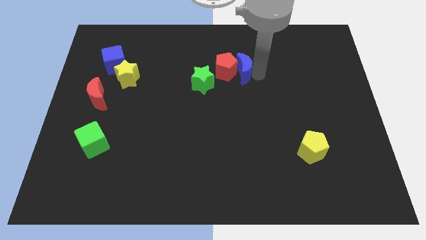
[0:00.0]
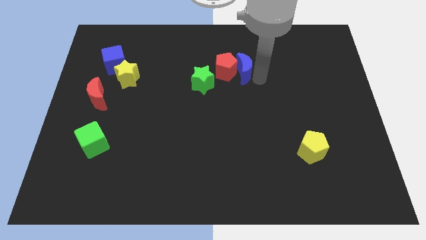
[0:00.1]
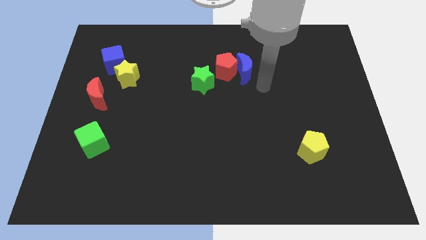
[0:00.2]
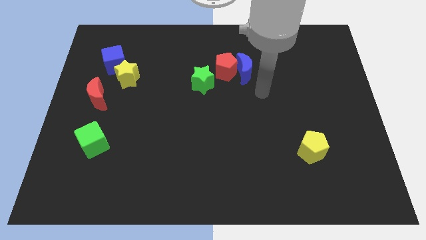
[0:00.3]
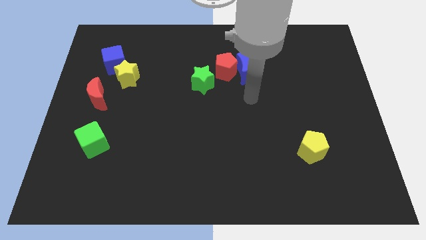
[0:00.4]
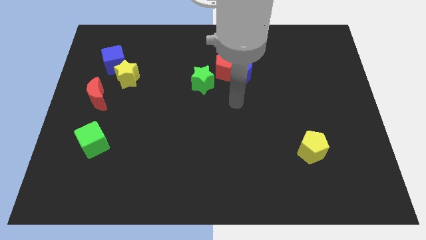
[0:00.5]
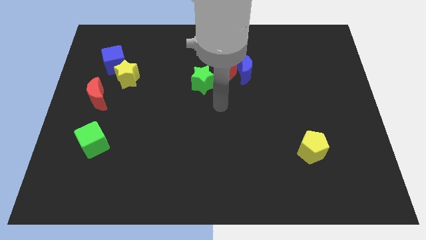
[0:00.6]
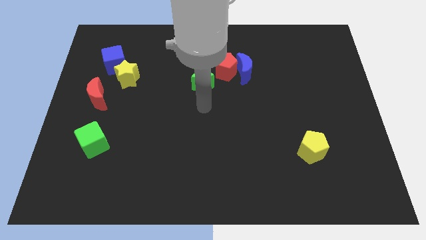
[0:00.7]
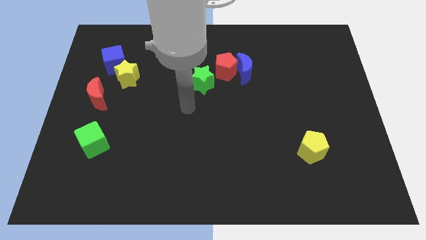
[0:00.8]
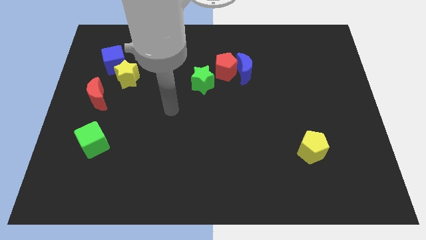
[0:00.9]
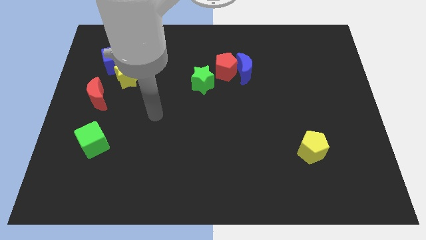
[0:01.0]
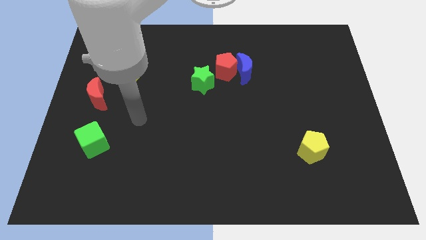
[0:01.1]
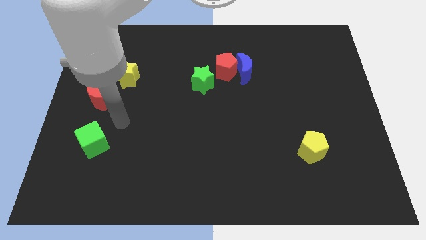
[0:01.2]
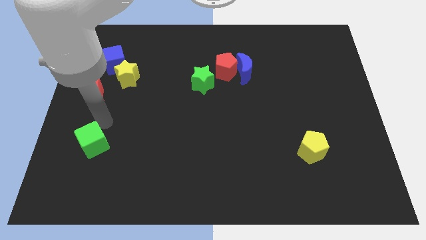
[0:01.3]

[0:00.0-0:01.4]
move your arm close to the green cube

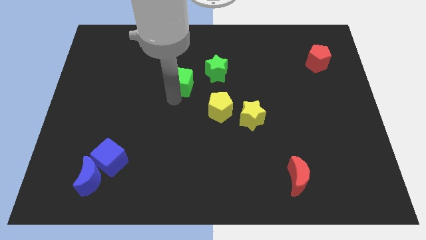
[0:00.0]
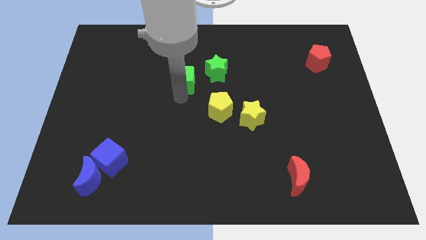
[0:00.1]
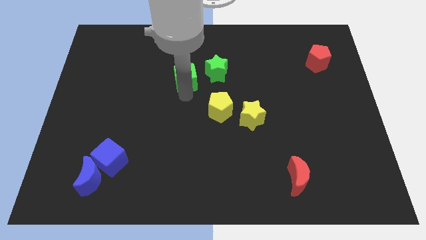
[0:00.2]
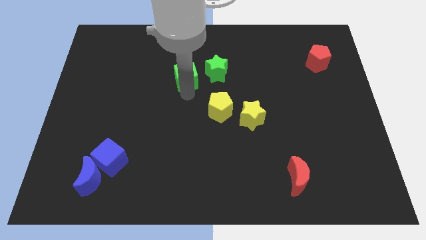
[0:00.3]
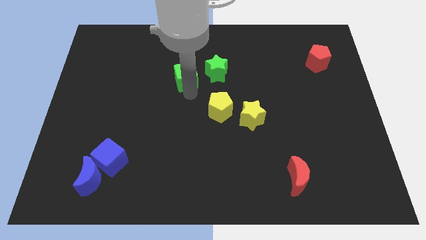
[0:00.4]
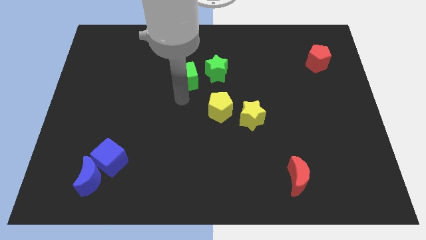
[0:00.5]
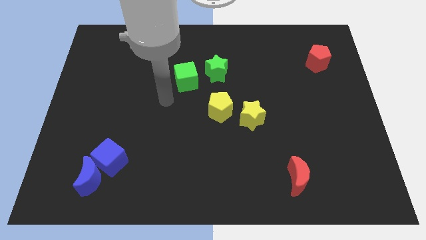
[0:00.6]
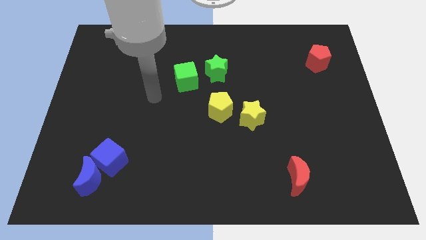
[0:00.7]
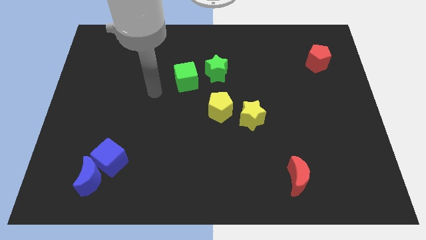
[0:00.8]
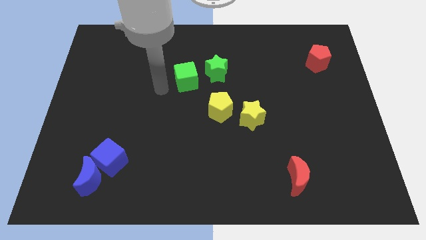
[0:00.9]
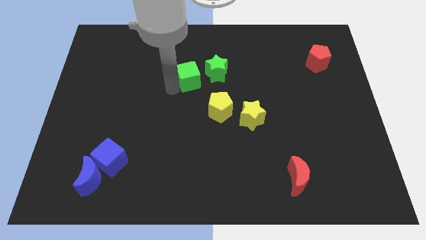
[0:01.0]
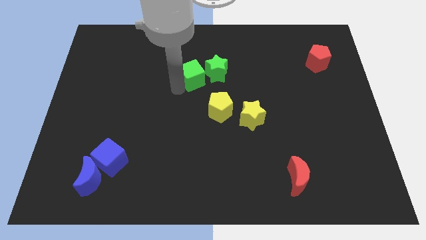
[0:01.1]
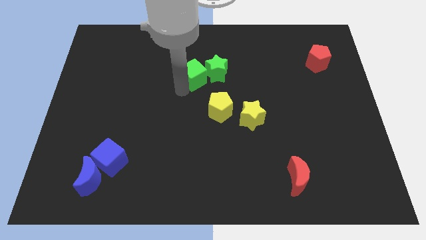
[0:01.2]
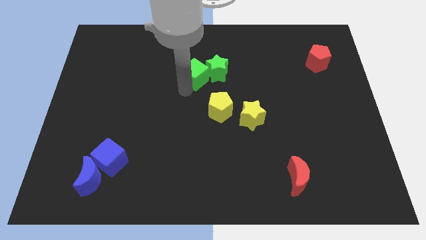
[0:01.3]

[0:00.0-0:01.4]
place the green cube to the left side of green star

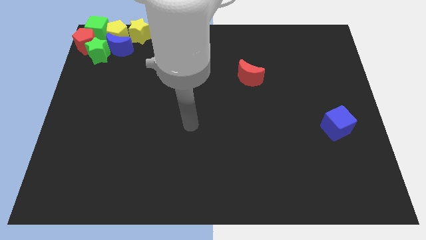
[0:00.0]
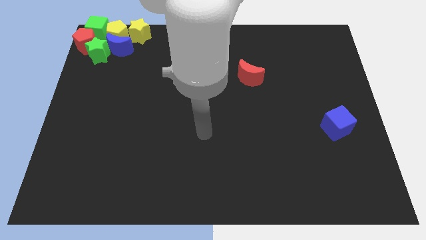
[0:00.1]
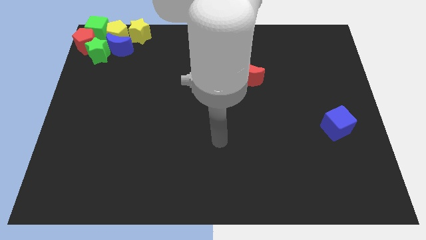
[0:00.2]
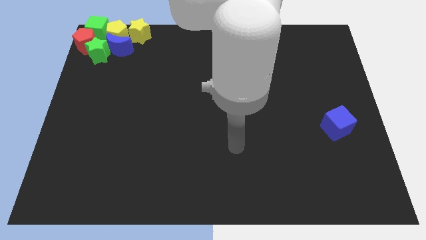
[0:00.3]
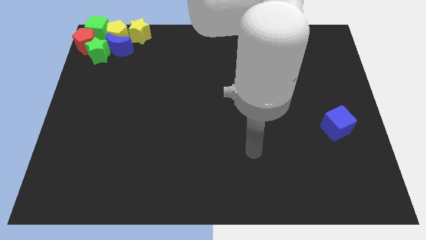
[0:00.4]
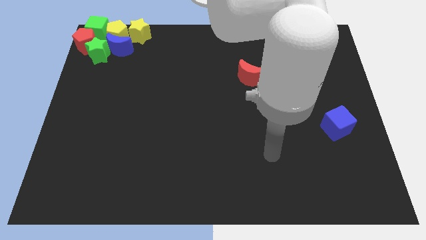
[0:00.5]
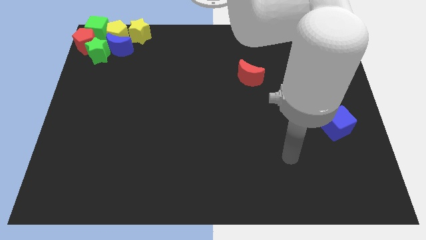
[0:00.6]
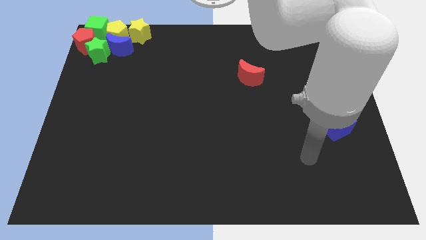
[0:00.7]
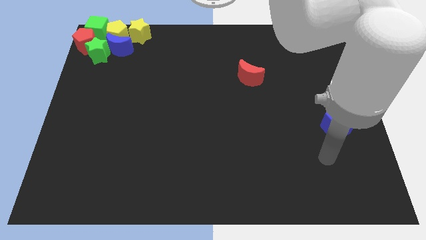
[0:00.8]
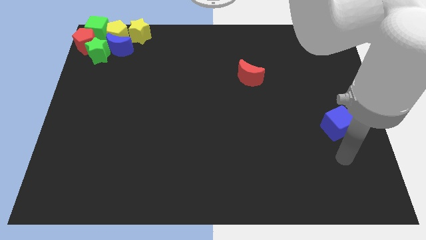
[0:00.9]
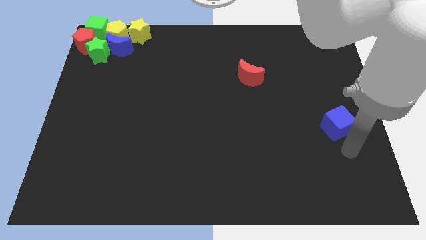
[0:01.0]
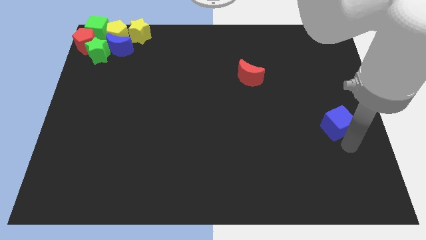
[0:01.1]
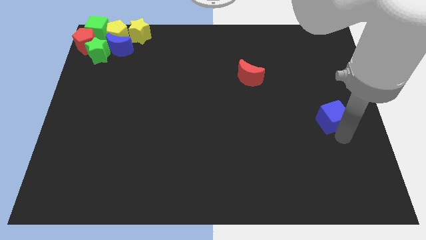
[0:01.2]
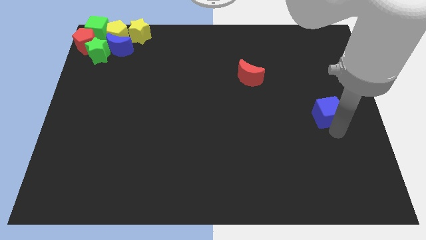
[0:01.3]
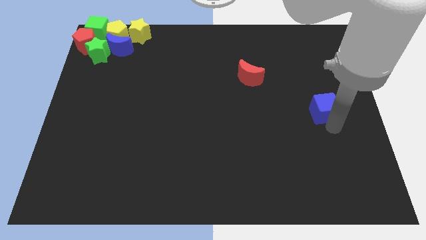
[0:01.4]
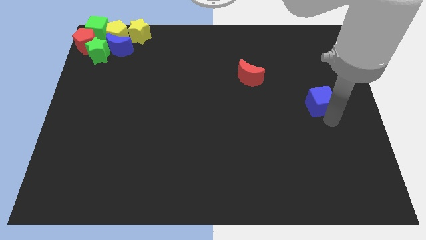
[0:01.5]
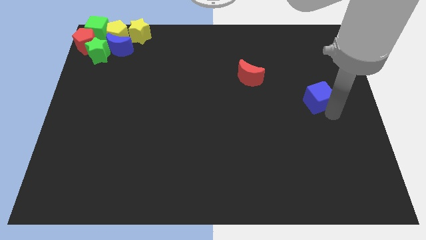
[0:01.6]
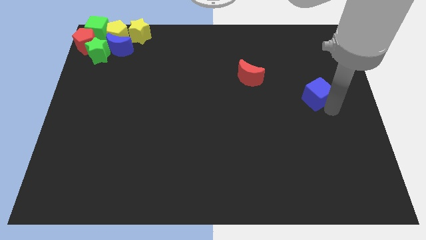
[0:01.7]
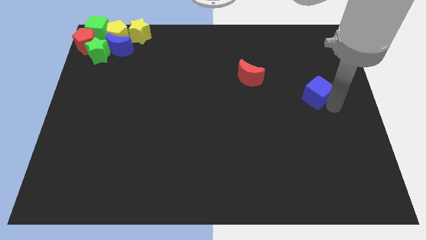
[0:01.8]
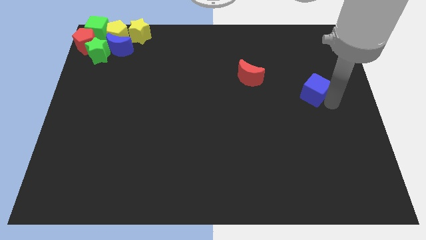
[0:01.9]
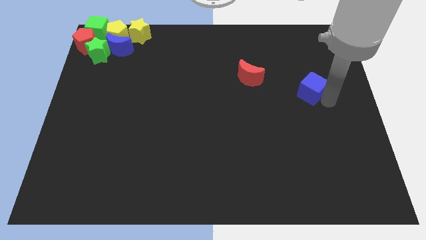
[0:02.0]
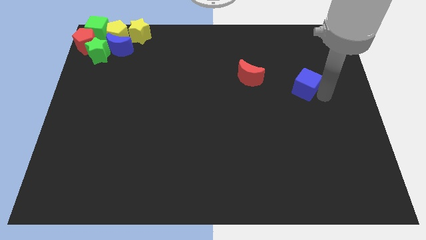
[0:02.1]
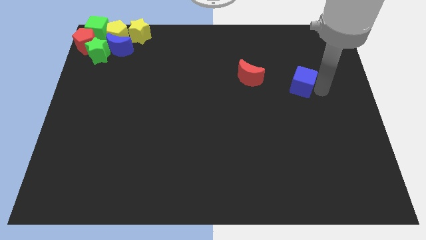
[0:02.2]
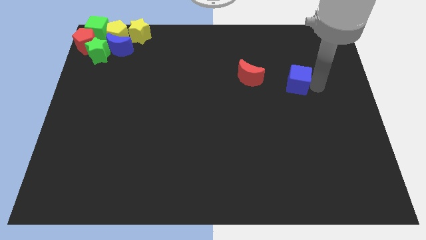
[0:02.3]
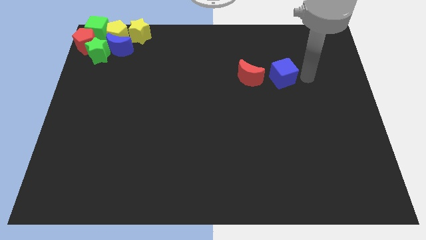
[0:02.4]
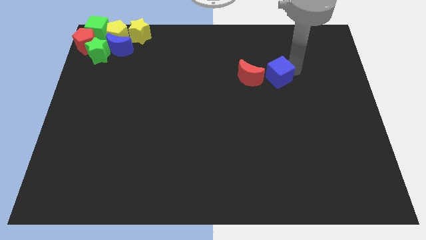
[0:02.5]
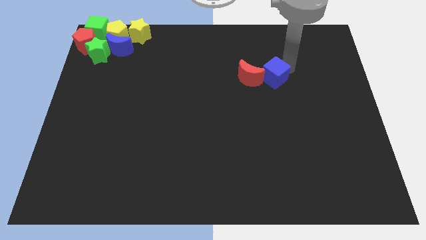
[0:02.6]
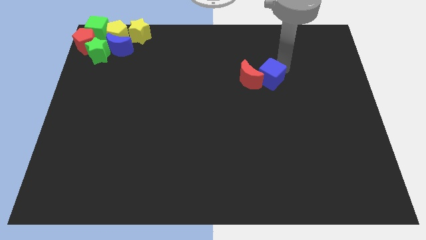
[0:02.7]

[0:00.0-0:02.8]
move blue cube right beside the red moon

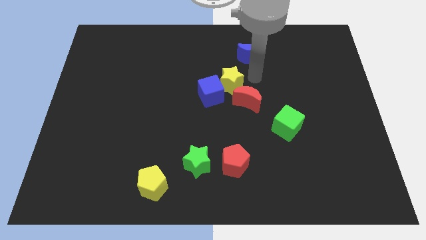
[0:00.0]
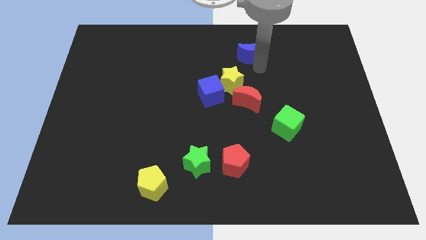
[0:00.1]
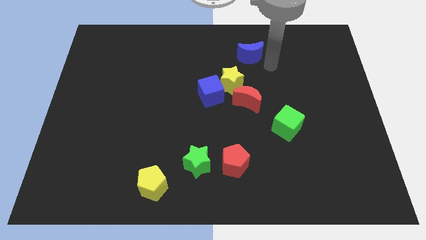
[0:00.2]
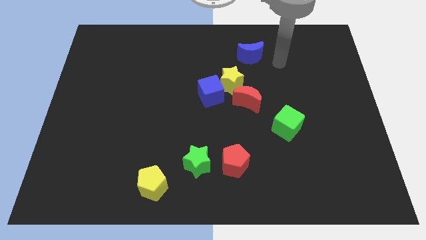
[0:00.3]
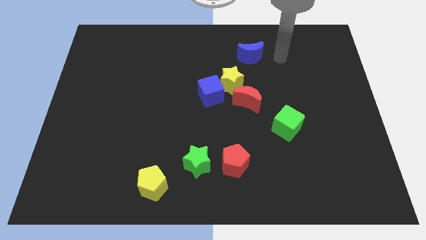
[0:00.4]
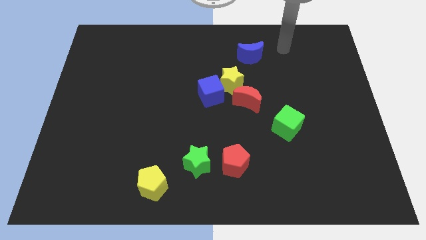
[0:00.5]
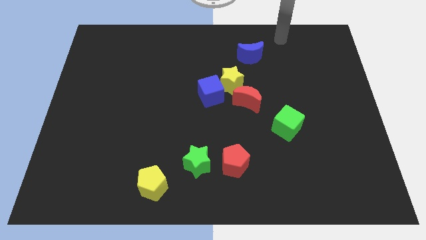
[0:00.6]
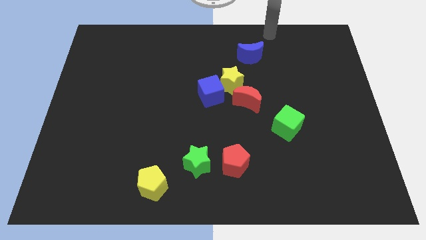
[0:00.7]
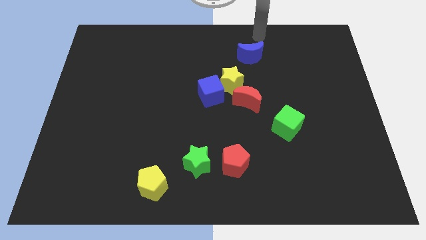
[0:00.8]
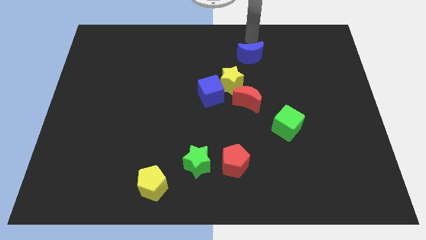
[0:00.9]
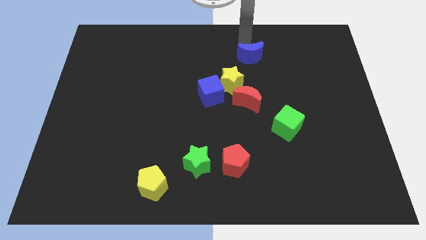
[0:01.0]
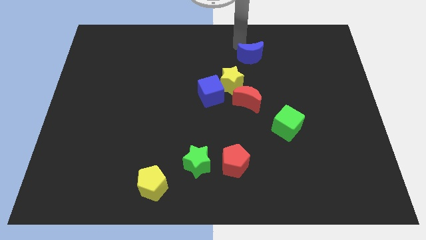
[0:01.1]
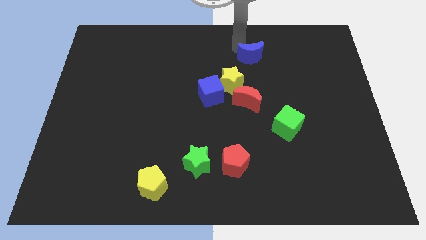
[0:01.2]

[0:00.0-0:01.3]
move your arm to the top of blue crescent

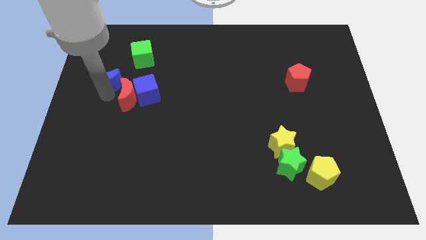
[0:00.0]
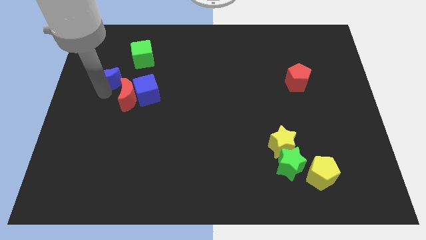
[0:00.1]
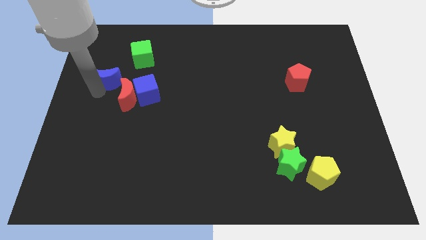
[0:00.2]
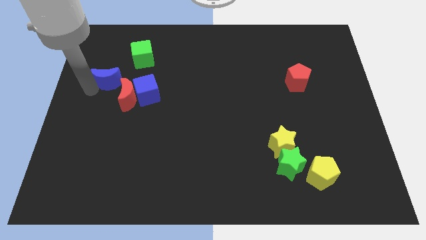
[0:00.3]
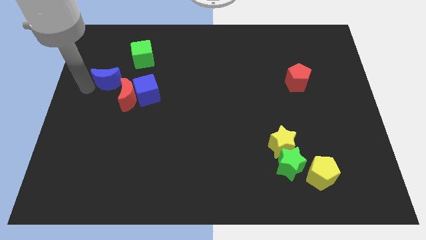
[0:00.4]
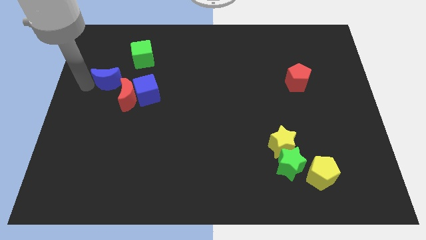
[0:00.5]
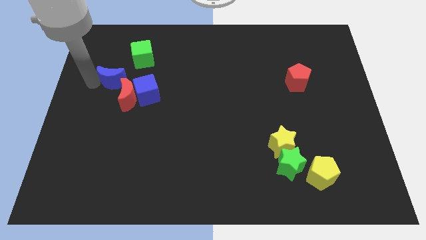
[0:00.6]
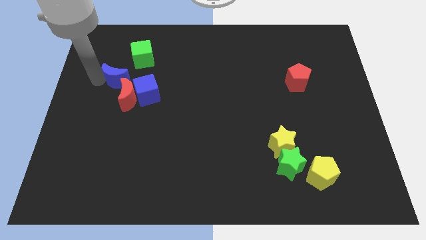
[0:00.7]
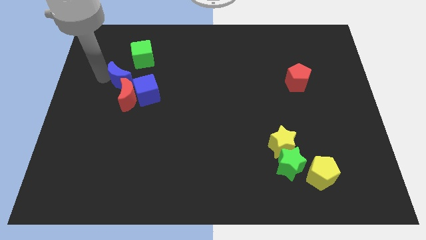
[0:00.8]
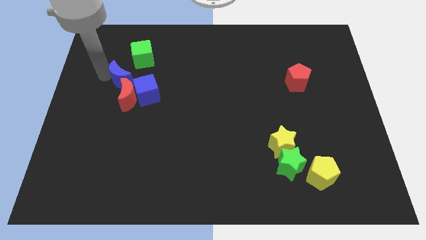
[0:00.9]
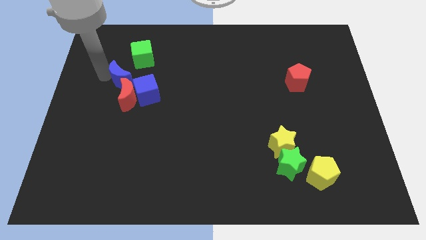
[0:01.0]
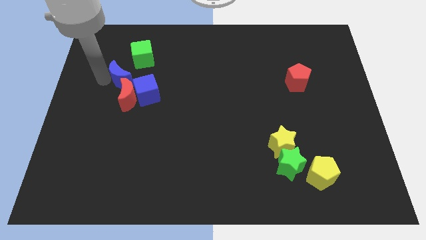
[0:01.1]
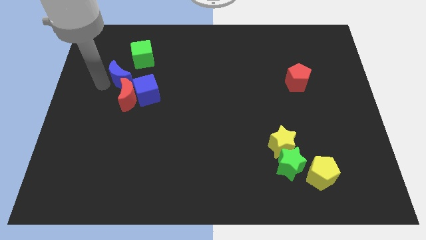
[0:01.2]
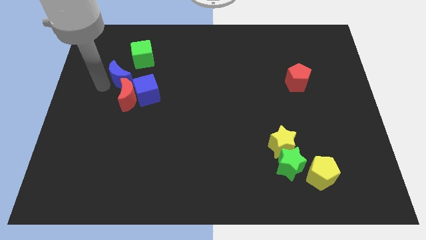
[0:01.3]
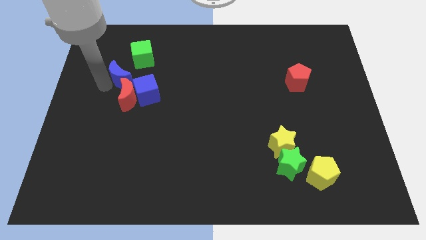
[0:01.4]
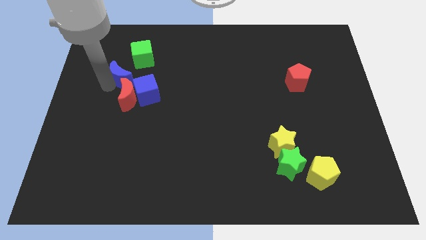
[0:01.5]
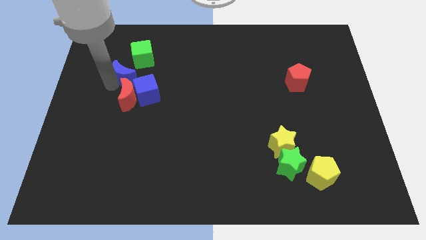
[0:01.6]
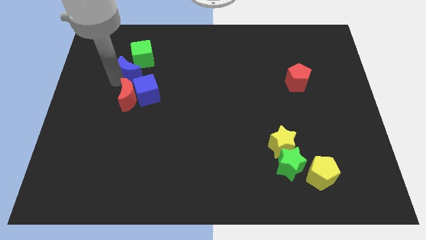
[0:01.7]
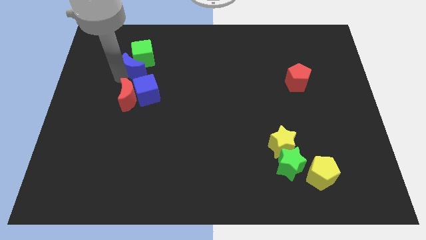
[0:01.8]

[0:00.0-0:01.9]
place blue moon between green cube and blue cube

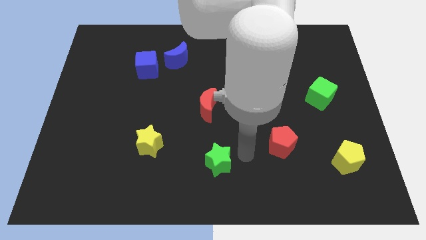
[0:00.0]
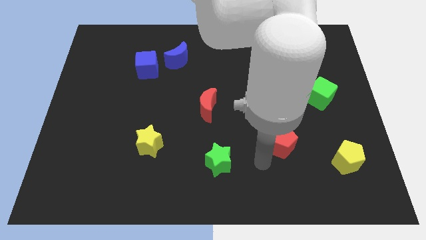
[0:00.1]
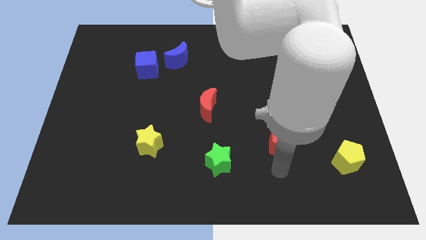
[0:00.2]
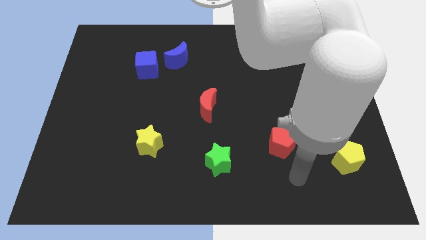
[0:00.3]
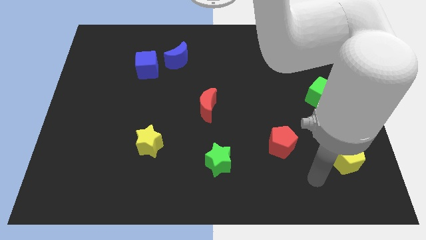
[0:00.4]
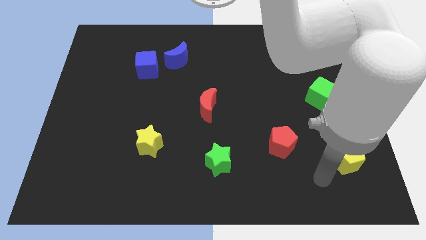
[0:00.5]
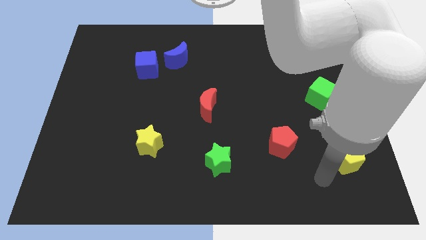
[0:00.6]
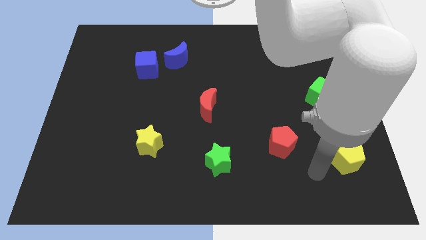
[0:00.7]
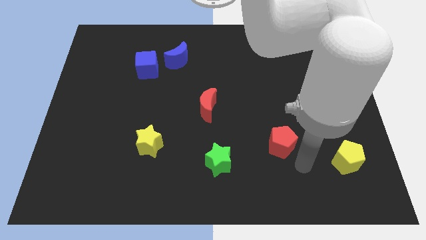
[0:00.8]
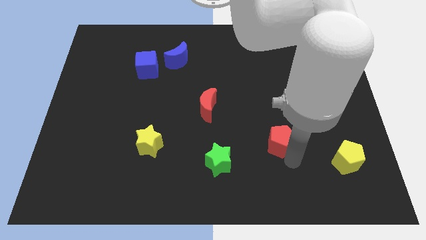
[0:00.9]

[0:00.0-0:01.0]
point your arm at the bottom of the red pentagon
